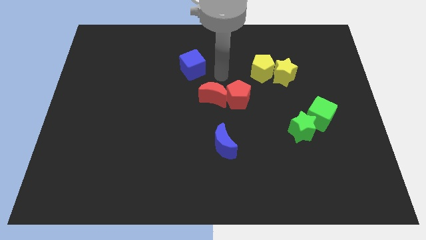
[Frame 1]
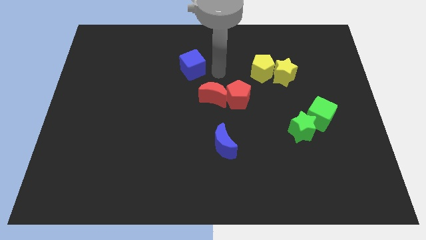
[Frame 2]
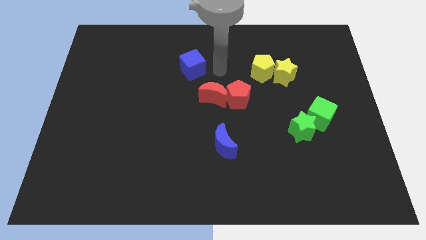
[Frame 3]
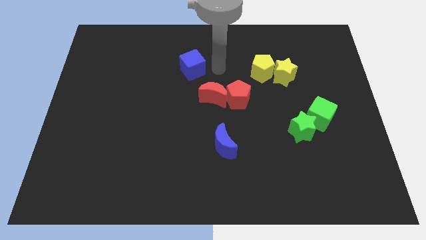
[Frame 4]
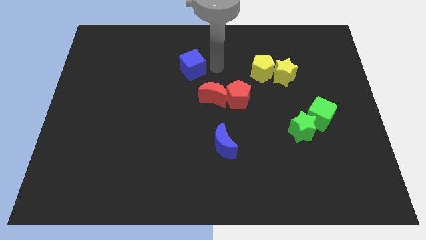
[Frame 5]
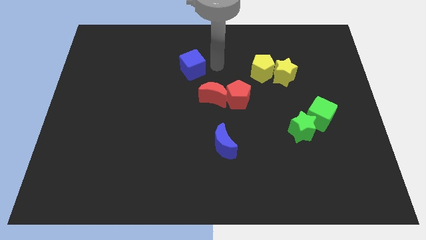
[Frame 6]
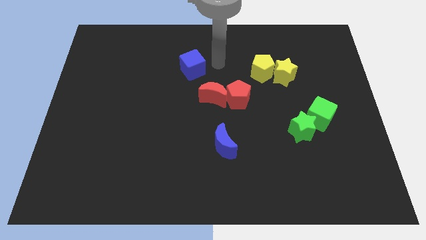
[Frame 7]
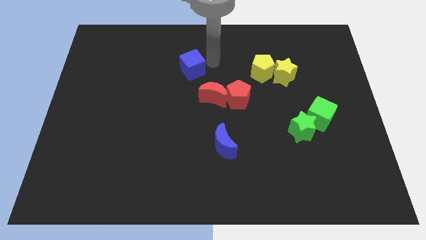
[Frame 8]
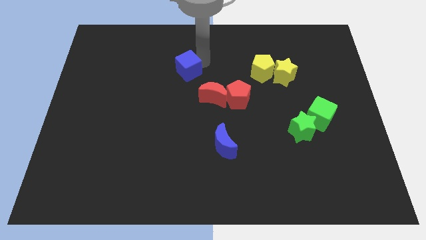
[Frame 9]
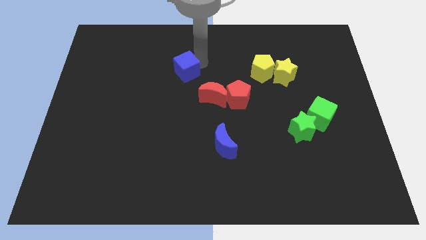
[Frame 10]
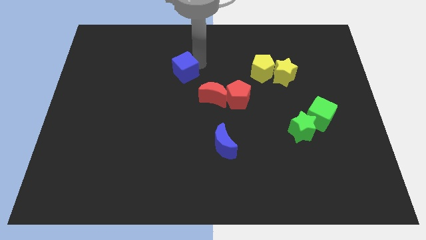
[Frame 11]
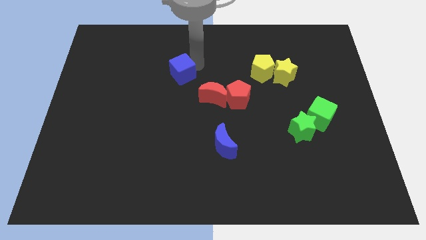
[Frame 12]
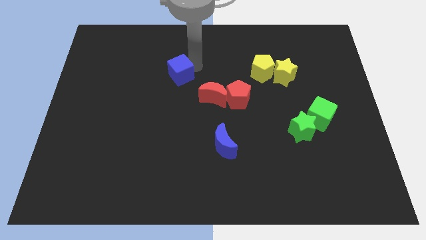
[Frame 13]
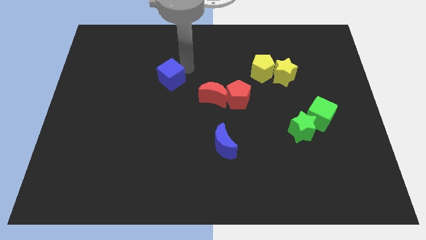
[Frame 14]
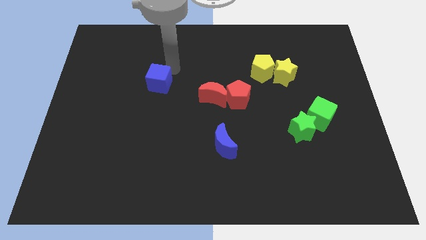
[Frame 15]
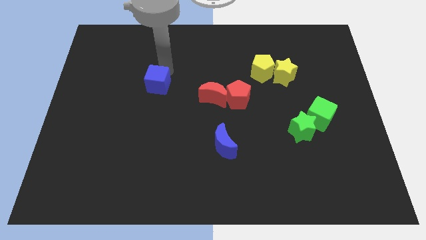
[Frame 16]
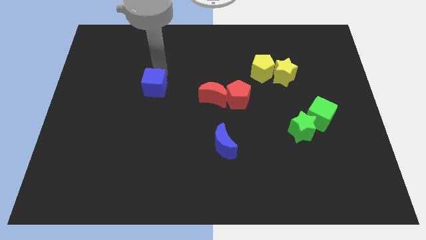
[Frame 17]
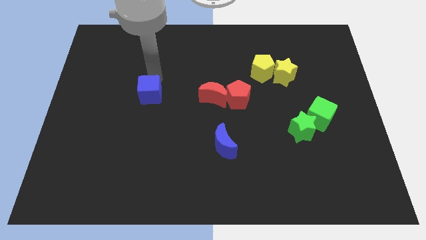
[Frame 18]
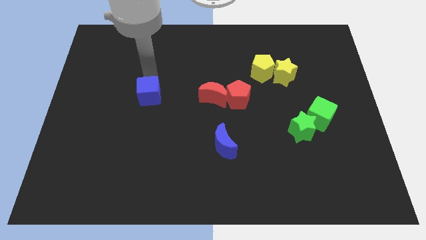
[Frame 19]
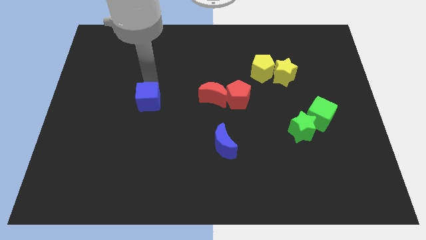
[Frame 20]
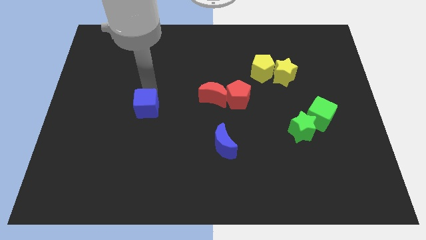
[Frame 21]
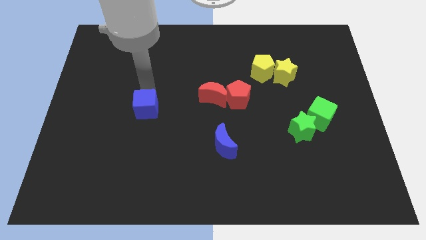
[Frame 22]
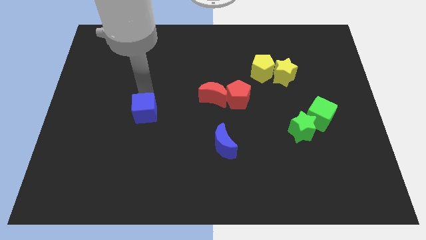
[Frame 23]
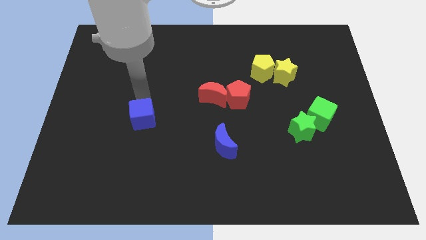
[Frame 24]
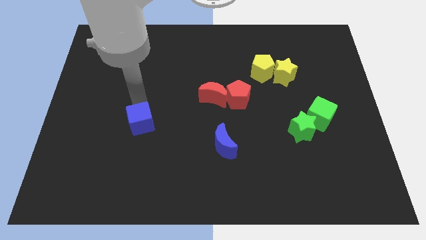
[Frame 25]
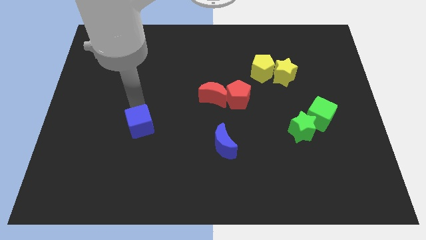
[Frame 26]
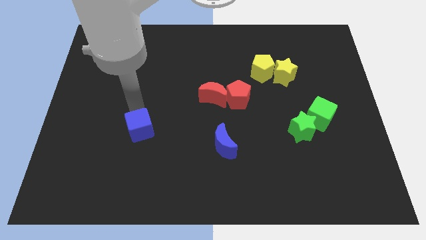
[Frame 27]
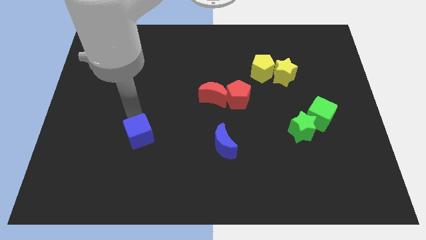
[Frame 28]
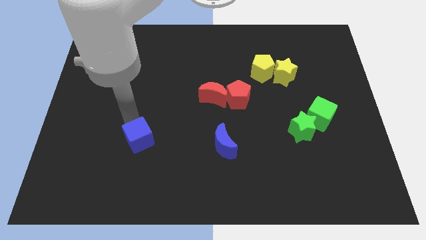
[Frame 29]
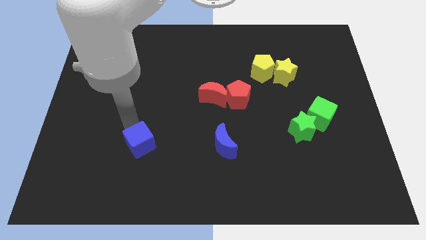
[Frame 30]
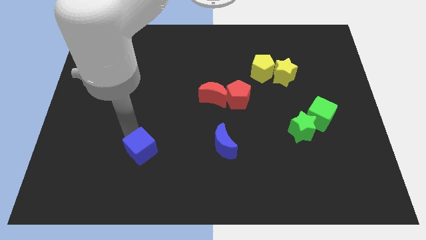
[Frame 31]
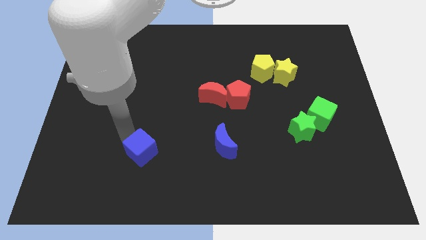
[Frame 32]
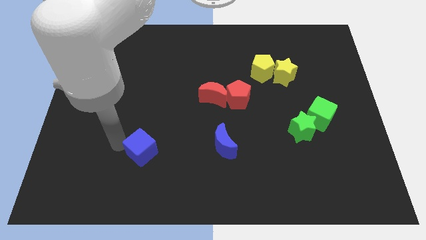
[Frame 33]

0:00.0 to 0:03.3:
put blue cube parallel left to blue crescent

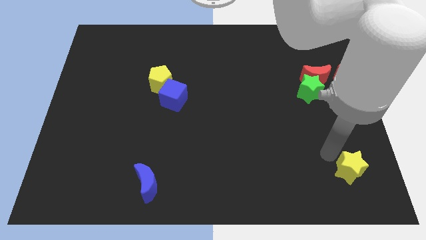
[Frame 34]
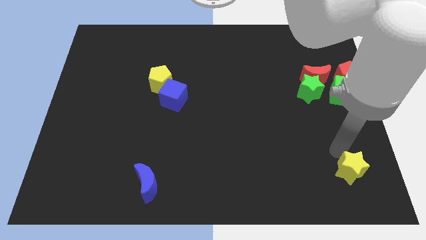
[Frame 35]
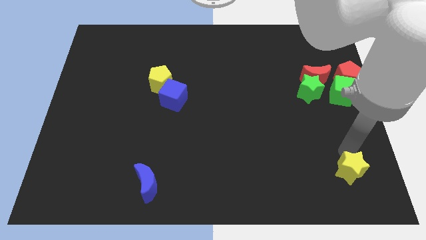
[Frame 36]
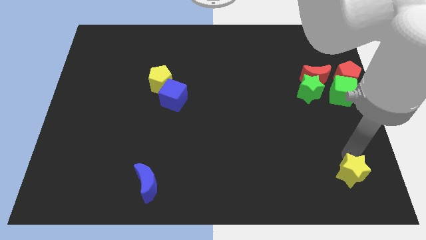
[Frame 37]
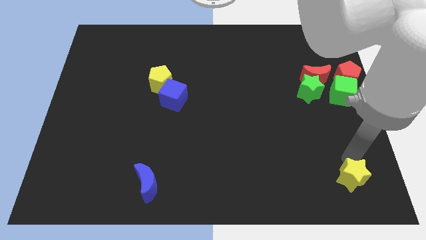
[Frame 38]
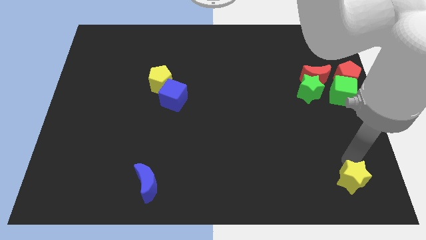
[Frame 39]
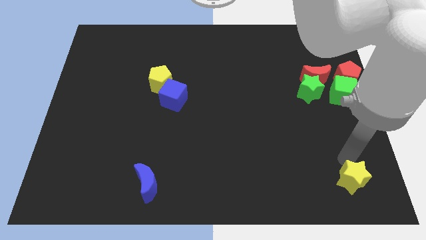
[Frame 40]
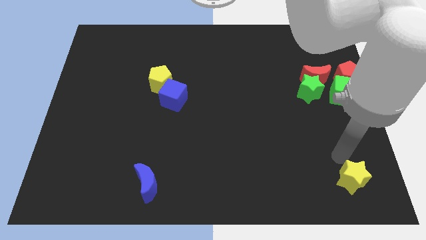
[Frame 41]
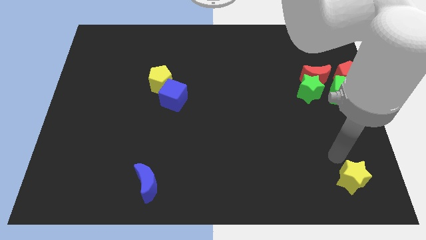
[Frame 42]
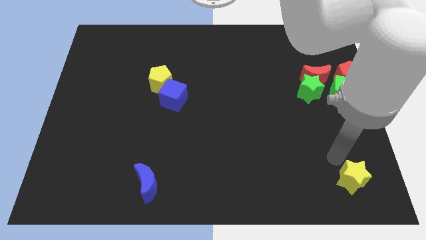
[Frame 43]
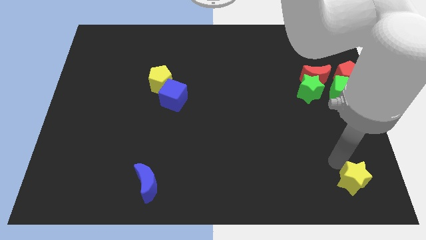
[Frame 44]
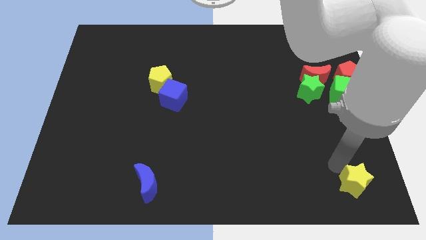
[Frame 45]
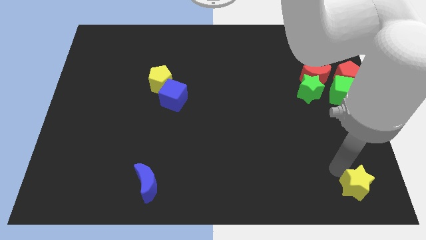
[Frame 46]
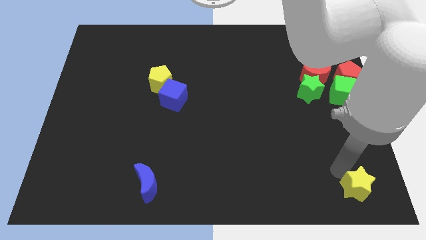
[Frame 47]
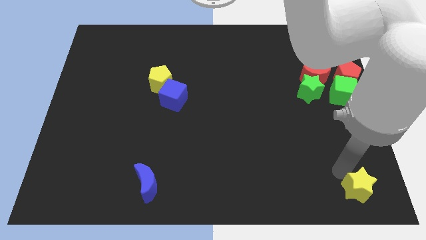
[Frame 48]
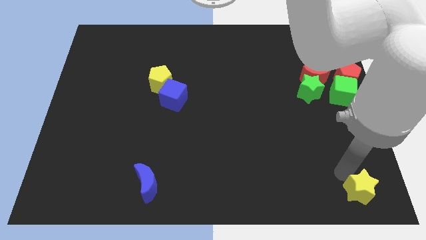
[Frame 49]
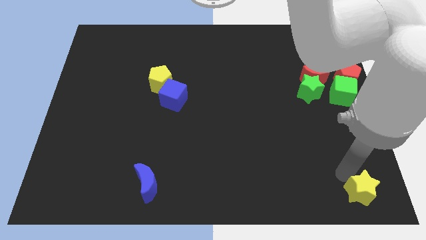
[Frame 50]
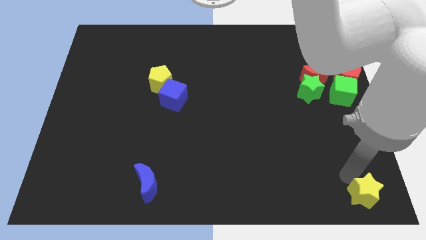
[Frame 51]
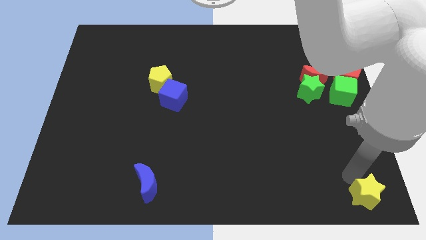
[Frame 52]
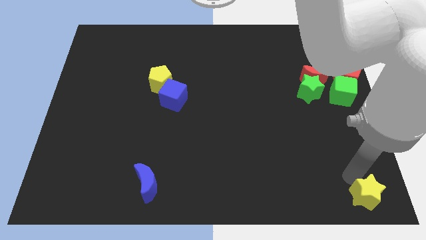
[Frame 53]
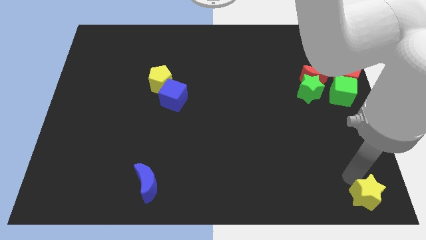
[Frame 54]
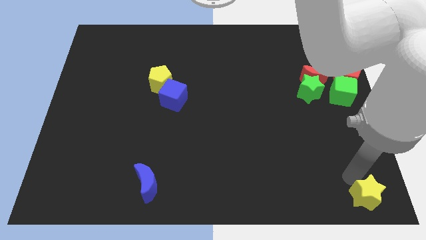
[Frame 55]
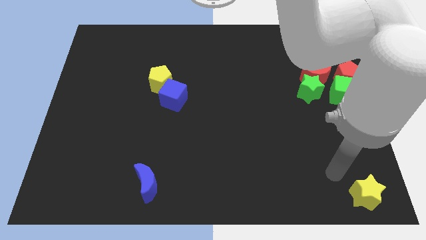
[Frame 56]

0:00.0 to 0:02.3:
push the yellow star to the bottom right corner

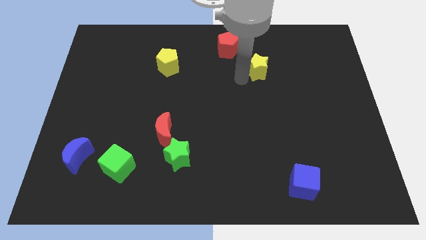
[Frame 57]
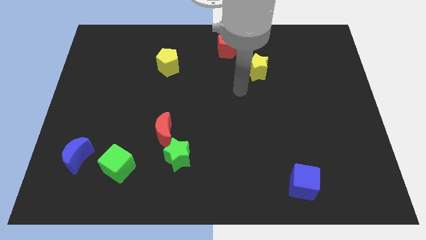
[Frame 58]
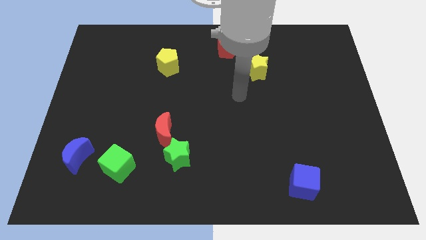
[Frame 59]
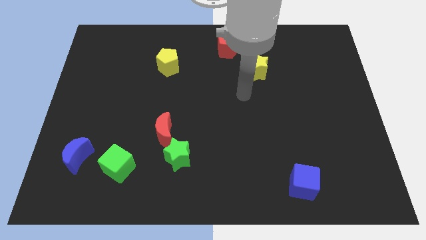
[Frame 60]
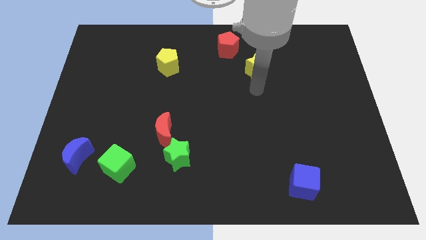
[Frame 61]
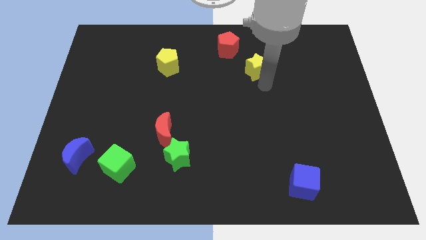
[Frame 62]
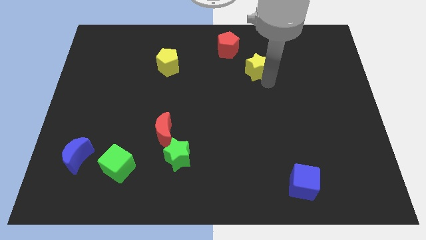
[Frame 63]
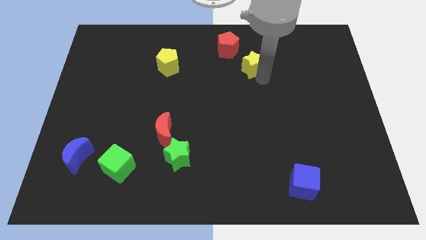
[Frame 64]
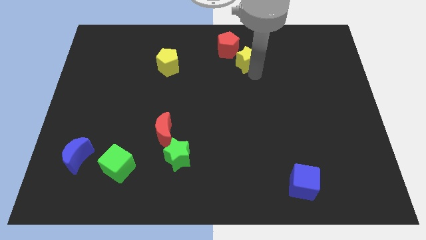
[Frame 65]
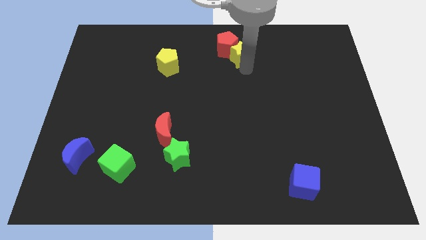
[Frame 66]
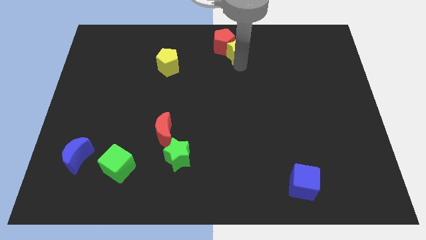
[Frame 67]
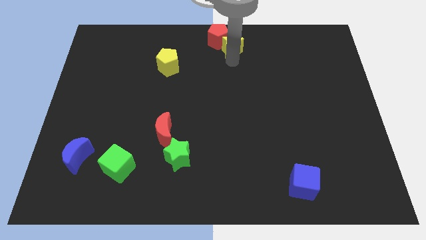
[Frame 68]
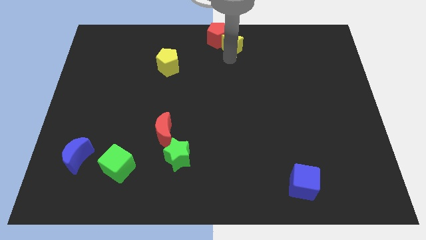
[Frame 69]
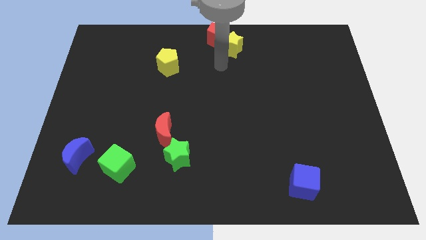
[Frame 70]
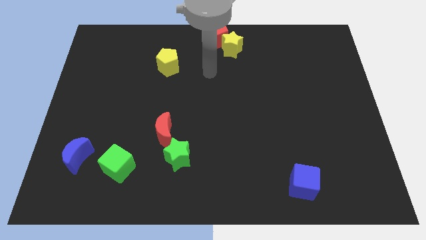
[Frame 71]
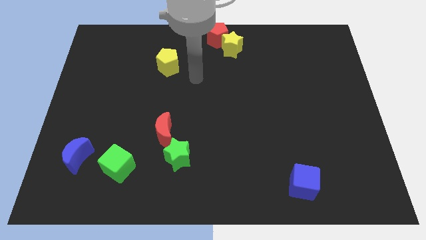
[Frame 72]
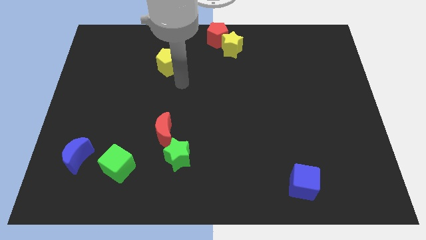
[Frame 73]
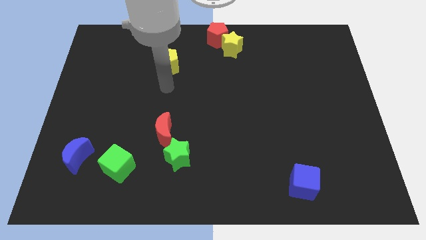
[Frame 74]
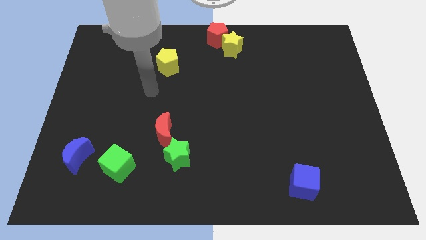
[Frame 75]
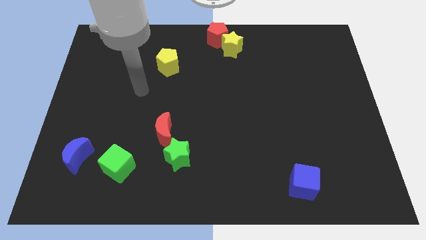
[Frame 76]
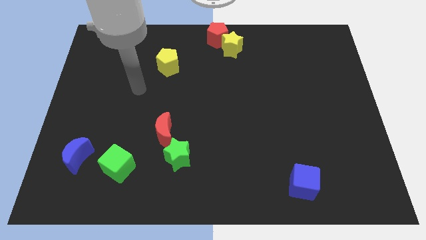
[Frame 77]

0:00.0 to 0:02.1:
push yellow star along with red pentagon to the top center

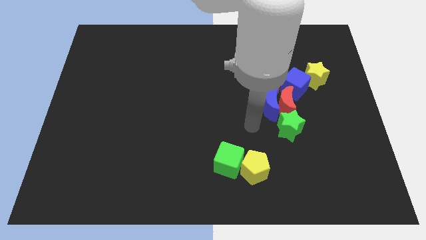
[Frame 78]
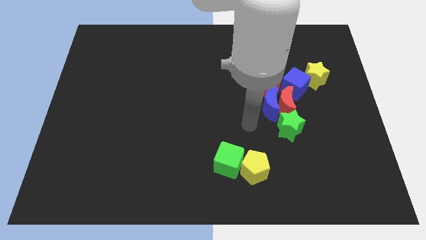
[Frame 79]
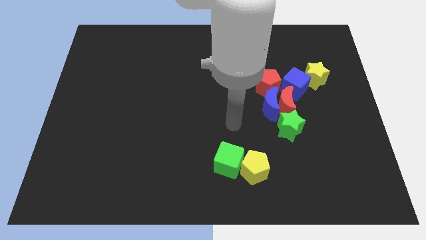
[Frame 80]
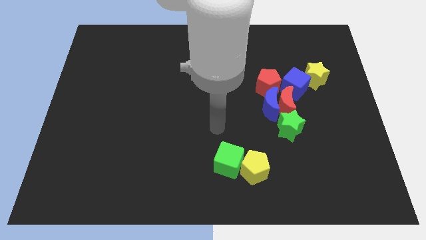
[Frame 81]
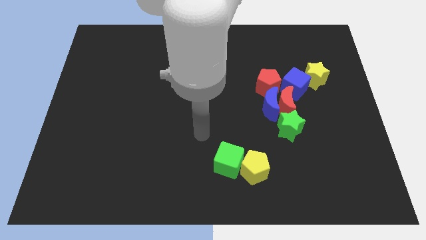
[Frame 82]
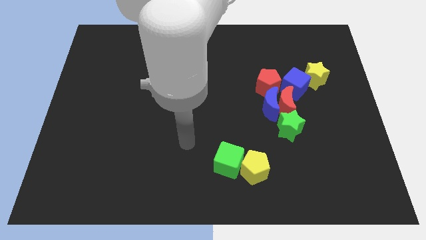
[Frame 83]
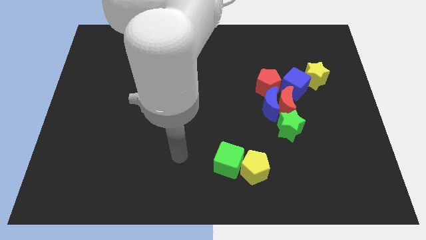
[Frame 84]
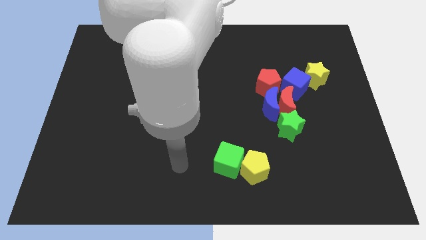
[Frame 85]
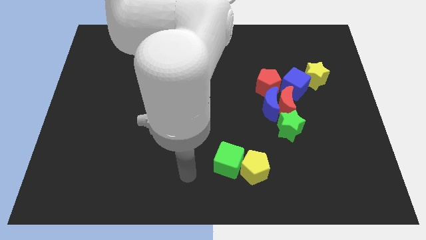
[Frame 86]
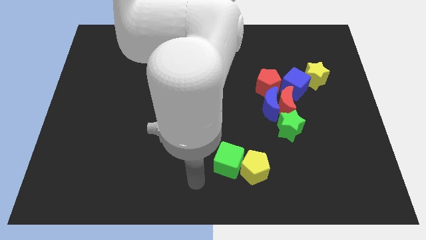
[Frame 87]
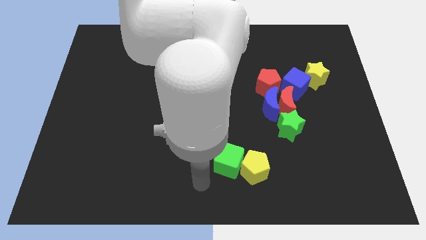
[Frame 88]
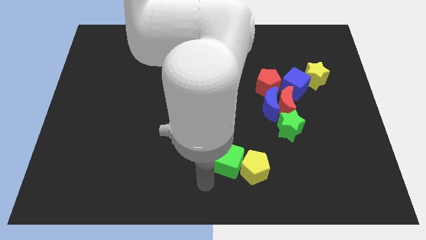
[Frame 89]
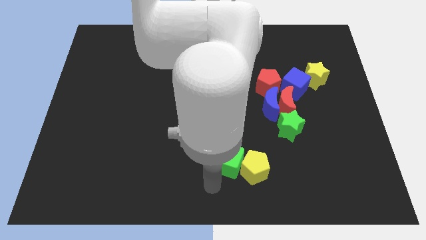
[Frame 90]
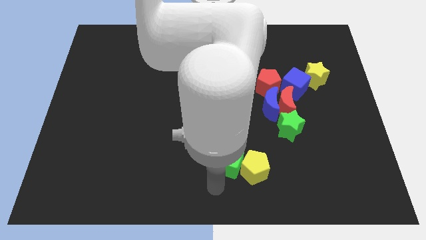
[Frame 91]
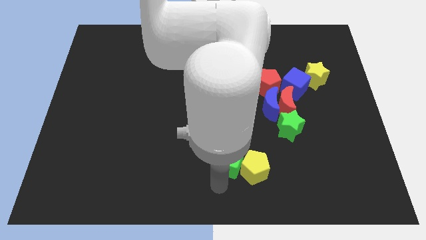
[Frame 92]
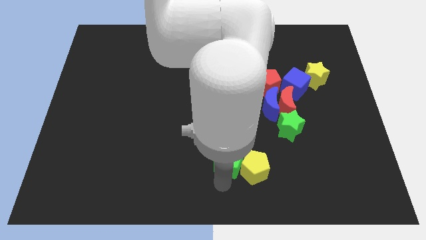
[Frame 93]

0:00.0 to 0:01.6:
place your arm at the bottom of the green cube
